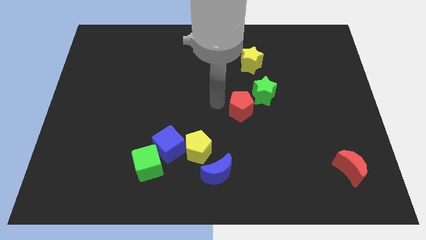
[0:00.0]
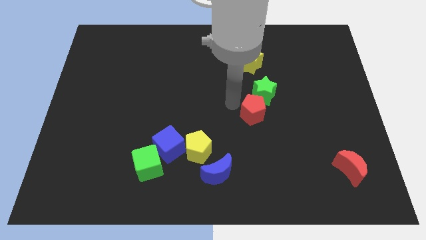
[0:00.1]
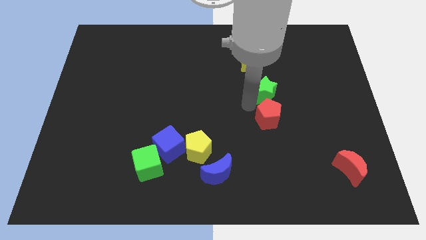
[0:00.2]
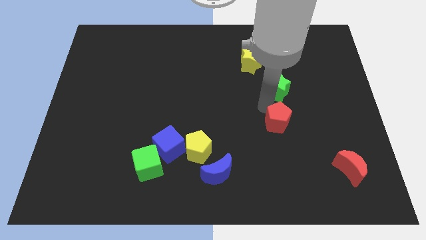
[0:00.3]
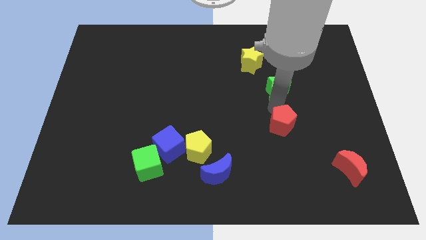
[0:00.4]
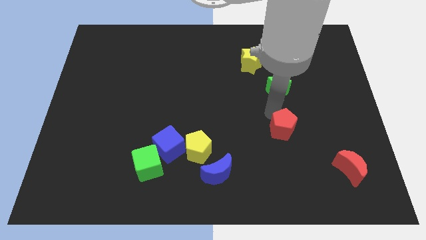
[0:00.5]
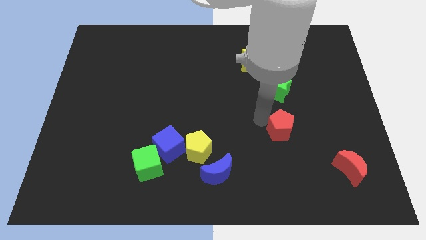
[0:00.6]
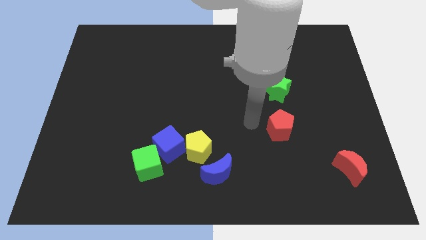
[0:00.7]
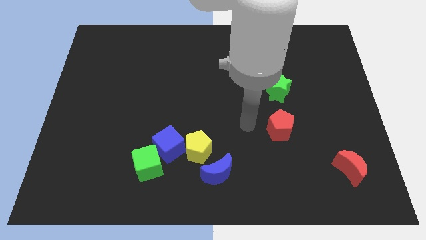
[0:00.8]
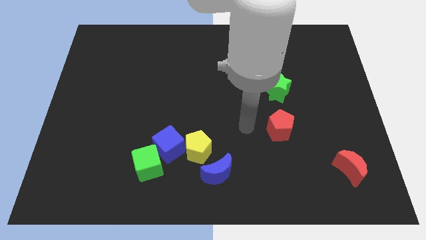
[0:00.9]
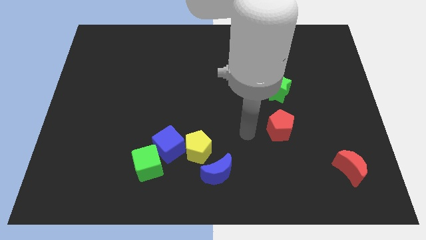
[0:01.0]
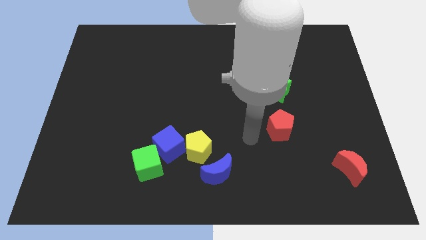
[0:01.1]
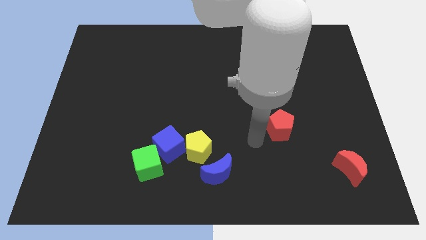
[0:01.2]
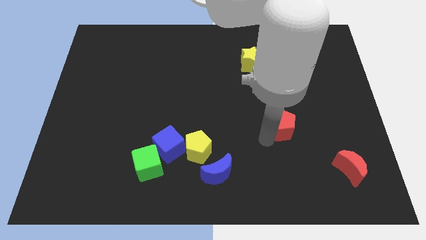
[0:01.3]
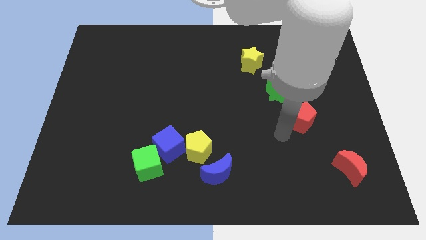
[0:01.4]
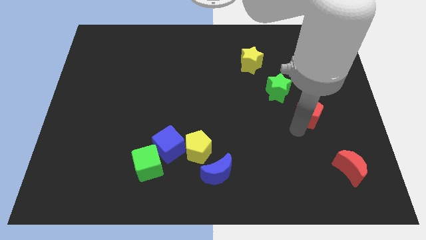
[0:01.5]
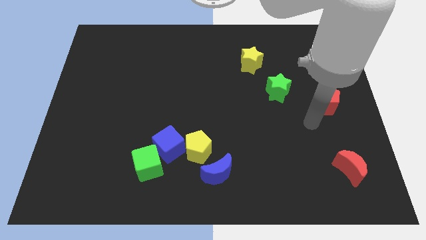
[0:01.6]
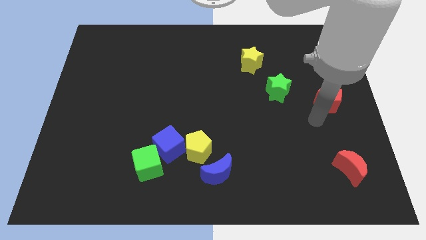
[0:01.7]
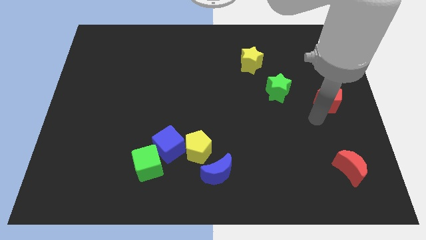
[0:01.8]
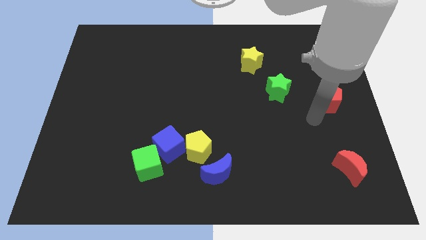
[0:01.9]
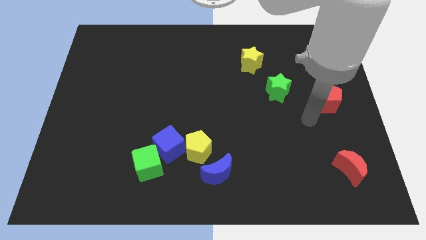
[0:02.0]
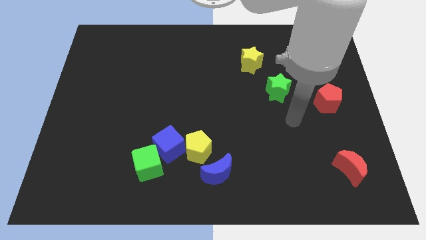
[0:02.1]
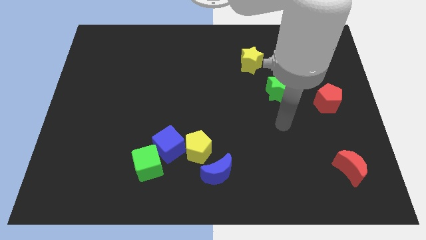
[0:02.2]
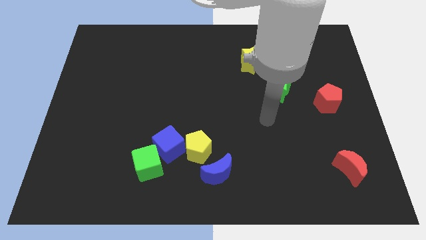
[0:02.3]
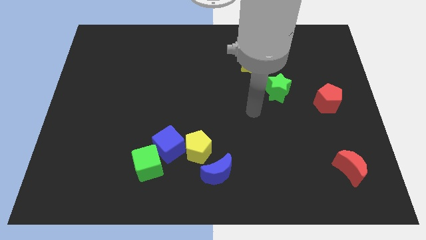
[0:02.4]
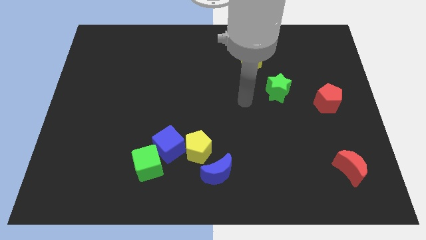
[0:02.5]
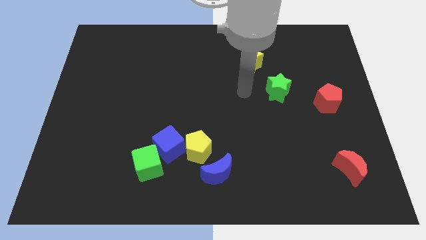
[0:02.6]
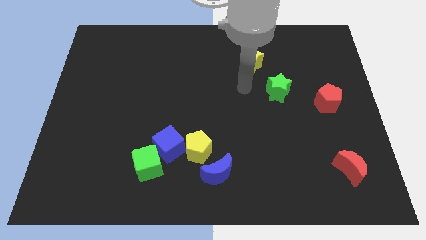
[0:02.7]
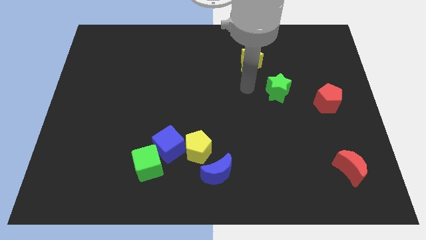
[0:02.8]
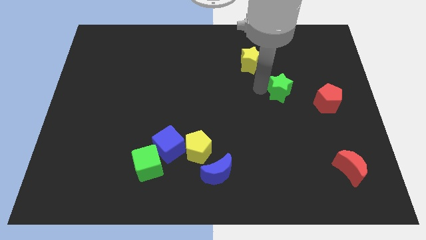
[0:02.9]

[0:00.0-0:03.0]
move the red pentagon towards the right side center of the board

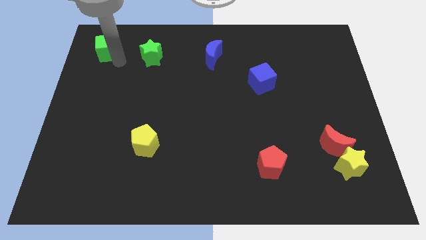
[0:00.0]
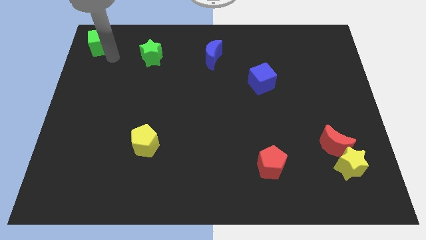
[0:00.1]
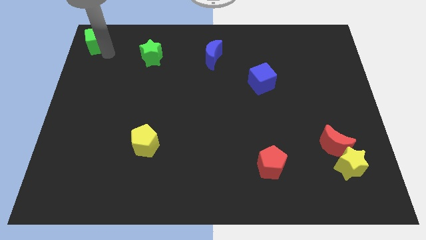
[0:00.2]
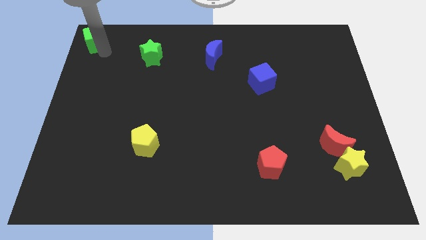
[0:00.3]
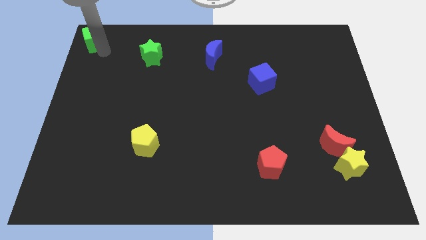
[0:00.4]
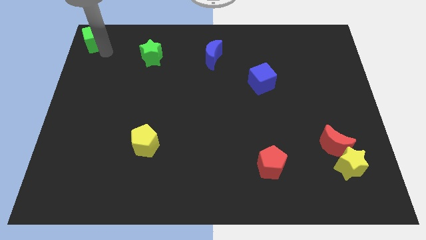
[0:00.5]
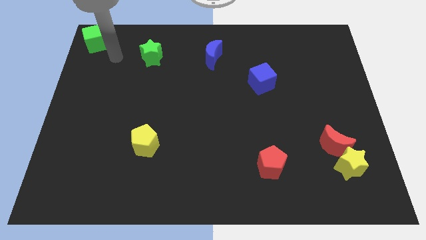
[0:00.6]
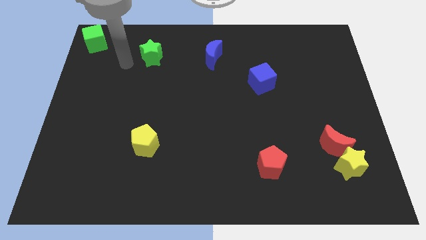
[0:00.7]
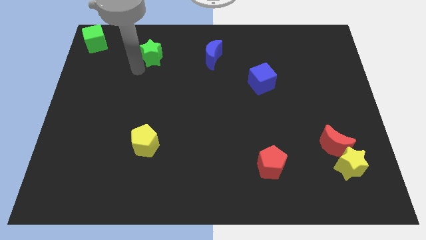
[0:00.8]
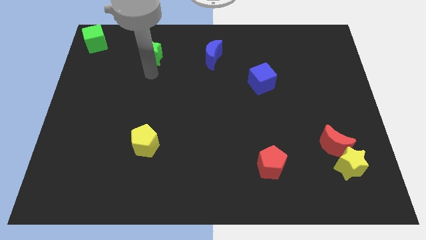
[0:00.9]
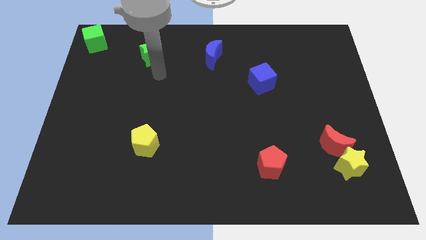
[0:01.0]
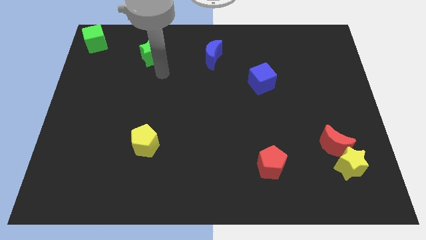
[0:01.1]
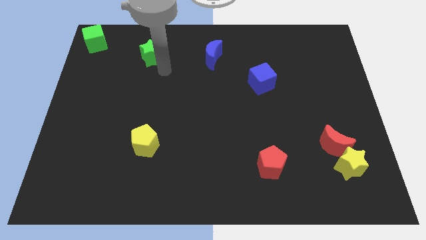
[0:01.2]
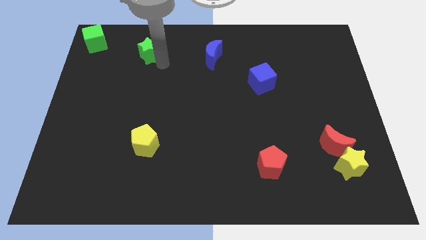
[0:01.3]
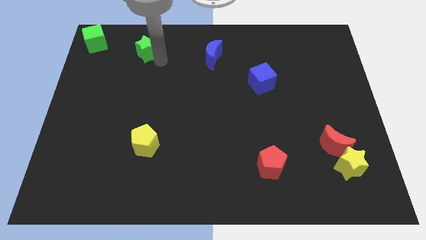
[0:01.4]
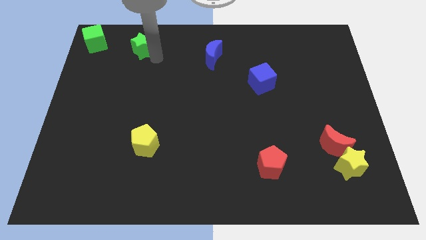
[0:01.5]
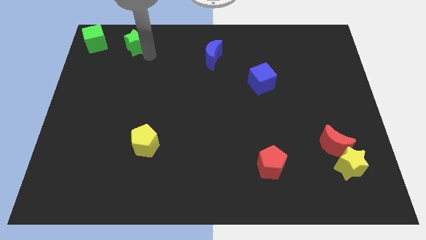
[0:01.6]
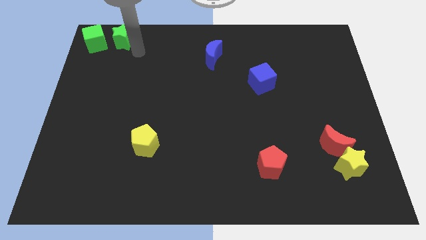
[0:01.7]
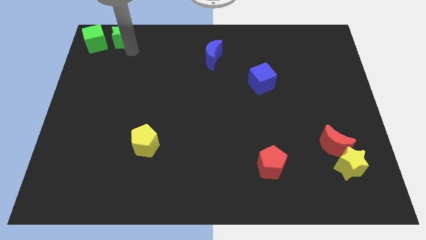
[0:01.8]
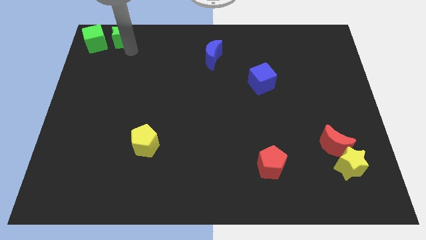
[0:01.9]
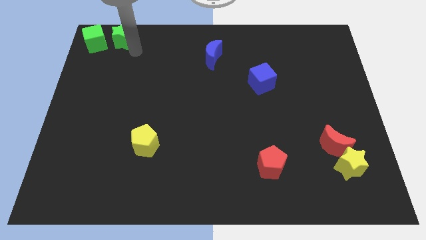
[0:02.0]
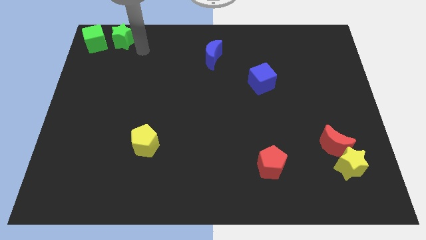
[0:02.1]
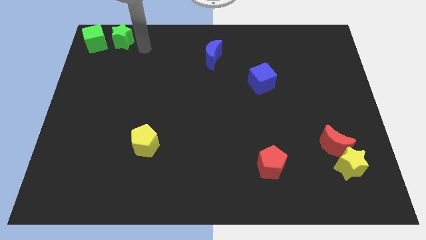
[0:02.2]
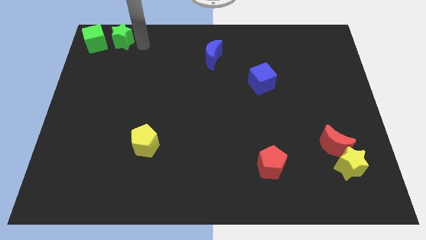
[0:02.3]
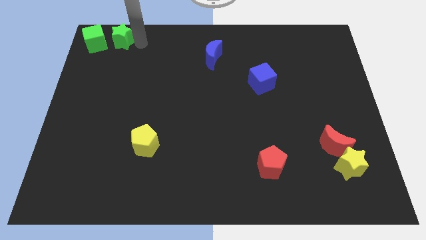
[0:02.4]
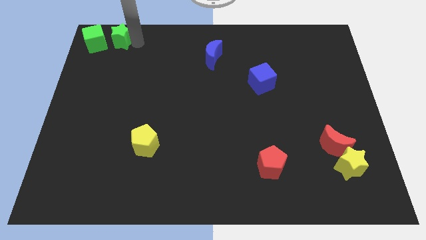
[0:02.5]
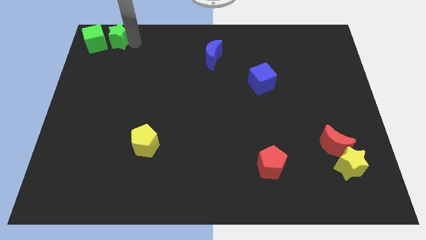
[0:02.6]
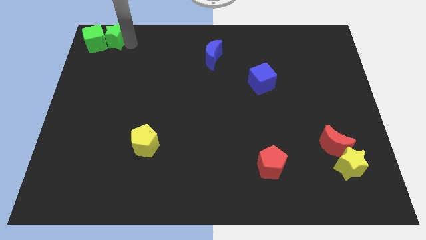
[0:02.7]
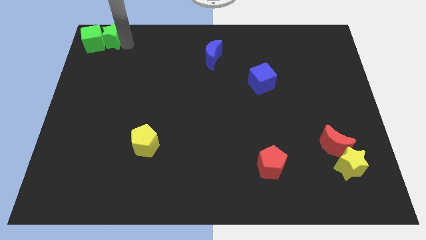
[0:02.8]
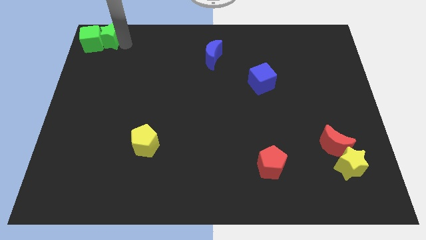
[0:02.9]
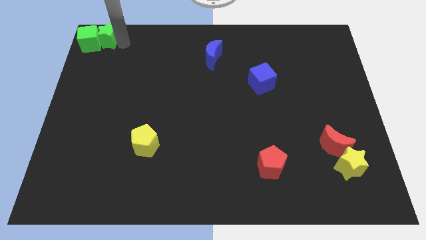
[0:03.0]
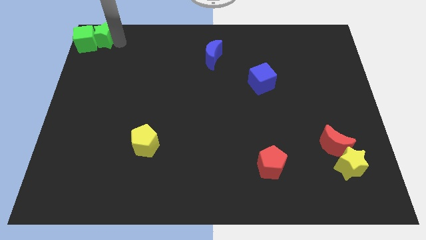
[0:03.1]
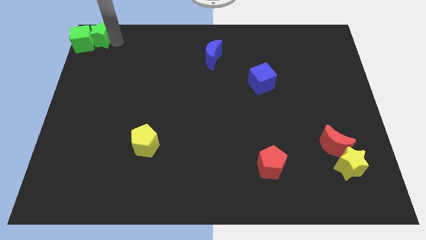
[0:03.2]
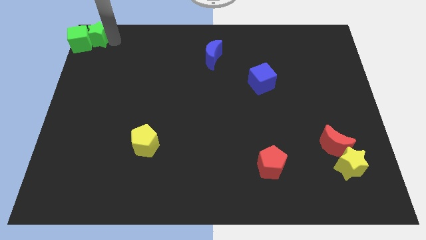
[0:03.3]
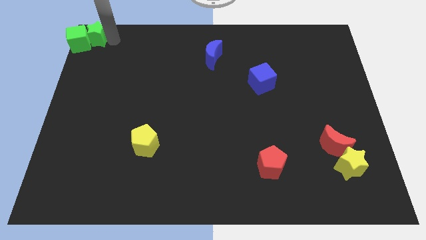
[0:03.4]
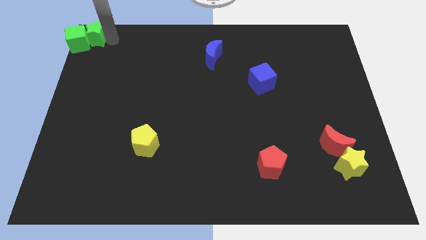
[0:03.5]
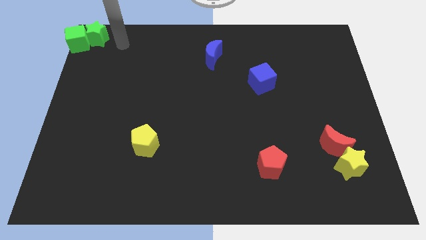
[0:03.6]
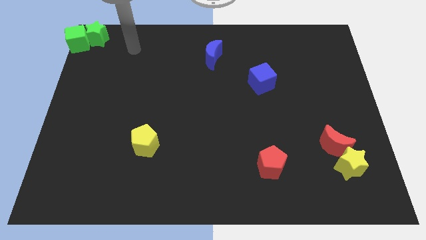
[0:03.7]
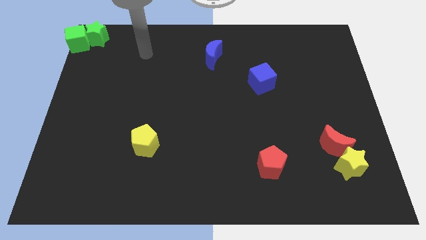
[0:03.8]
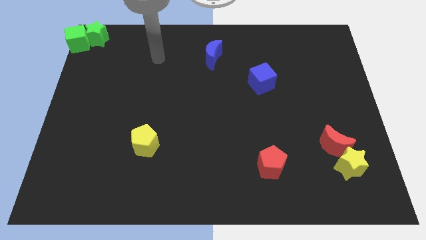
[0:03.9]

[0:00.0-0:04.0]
place both the green blocks at the top left corner of the board

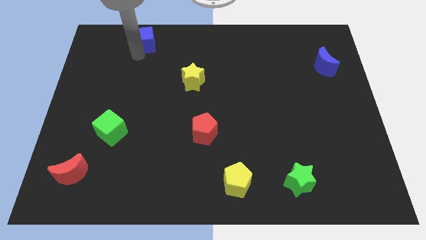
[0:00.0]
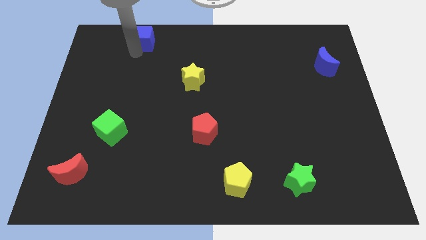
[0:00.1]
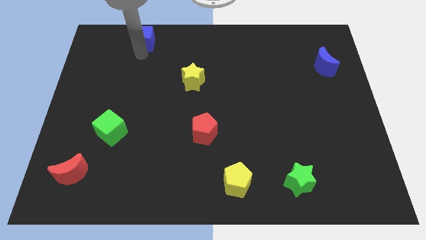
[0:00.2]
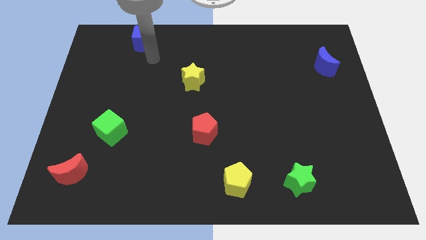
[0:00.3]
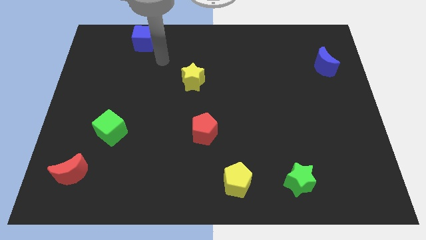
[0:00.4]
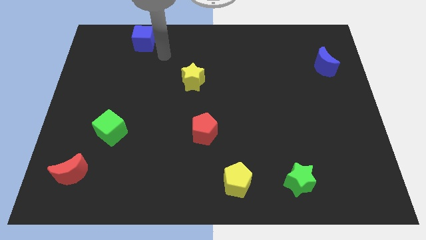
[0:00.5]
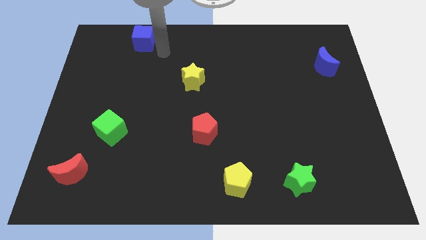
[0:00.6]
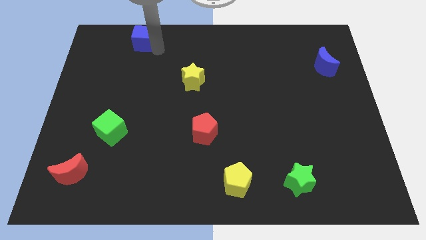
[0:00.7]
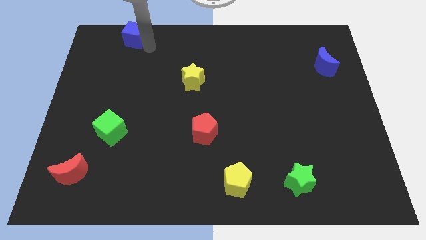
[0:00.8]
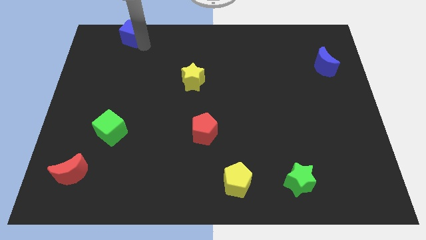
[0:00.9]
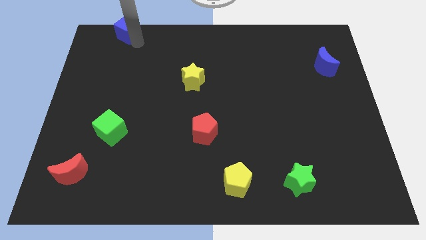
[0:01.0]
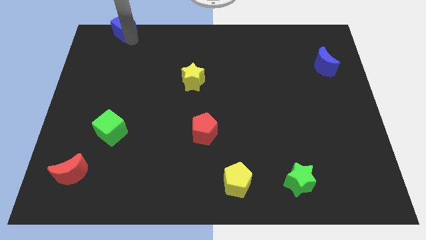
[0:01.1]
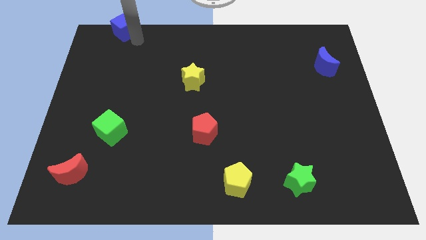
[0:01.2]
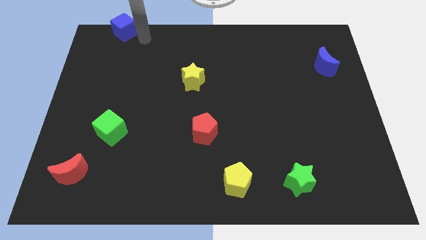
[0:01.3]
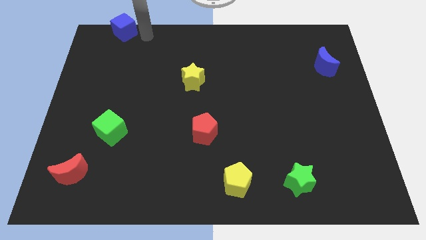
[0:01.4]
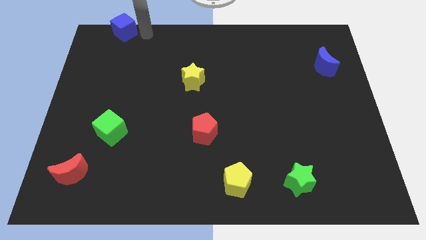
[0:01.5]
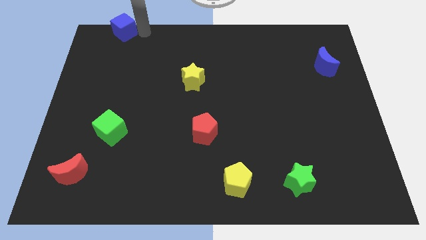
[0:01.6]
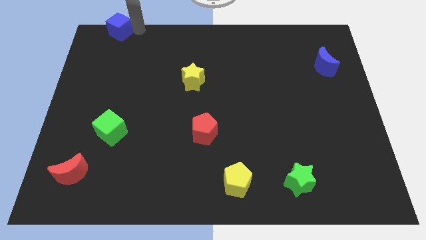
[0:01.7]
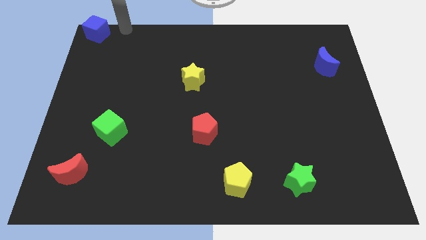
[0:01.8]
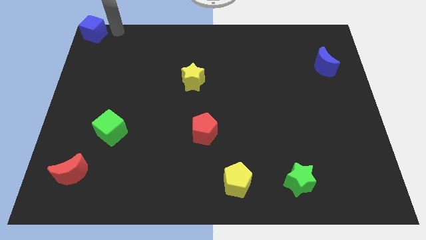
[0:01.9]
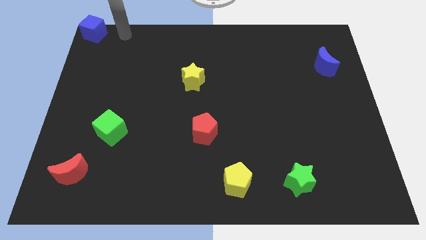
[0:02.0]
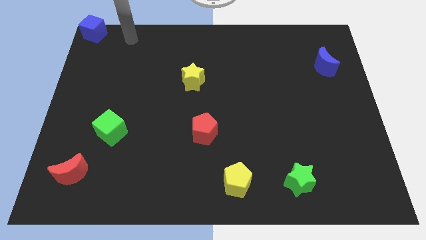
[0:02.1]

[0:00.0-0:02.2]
place the blue cube at the top left corner of the board
